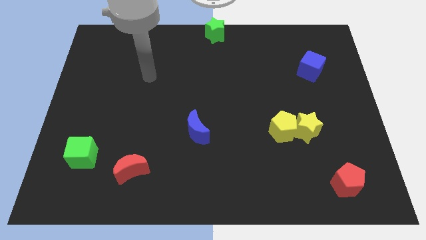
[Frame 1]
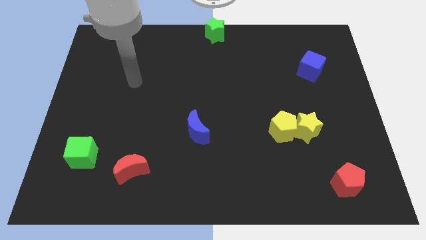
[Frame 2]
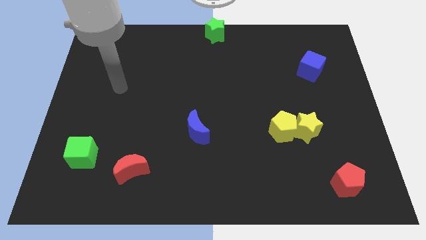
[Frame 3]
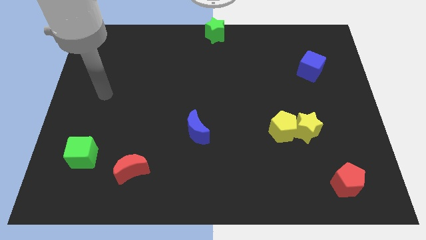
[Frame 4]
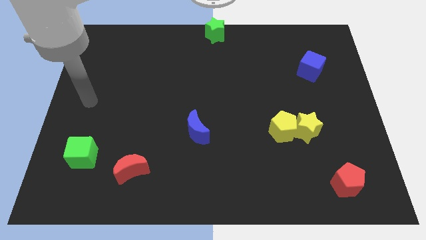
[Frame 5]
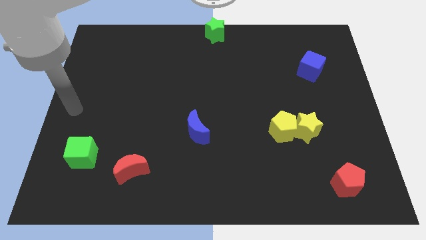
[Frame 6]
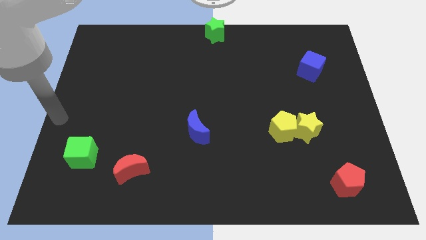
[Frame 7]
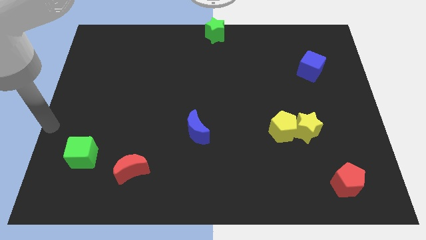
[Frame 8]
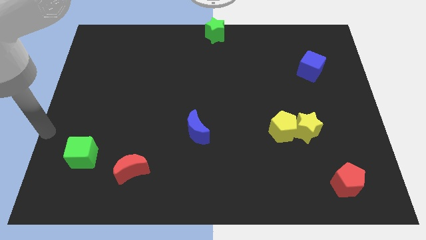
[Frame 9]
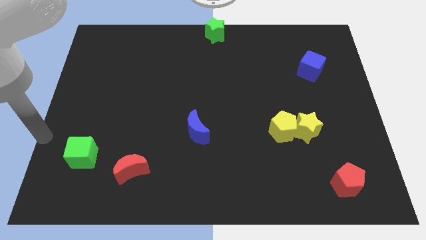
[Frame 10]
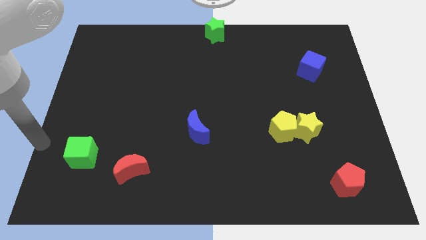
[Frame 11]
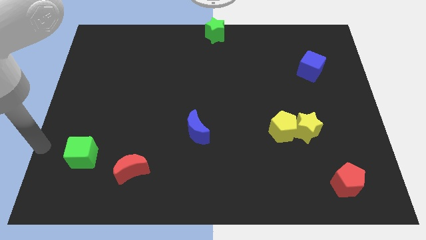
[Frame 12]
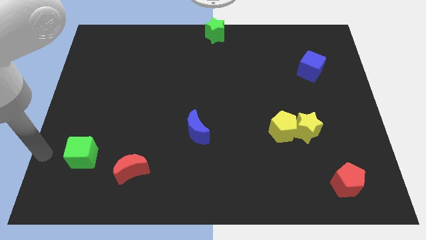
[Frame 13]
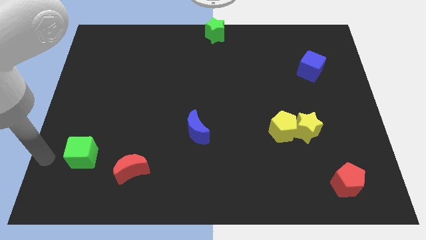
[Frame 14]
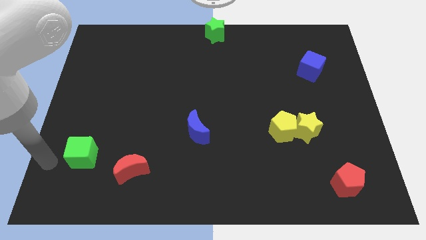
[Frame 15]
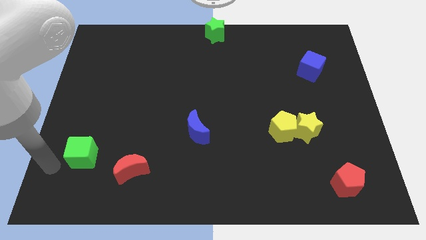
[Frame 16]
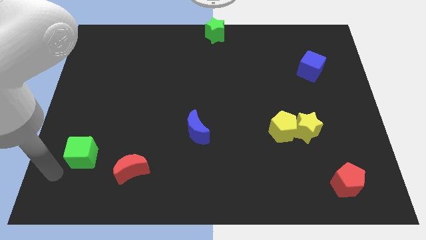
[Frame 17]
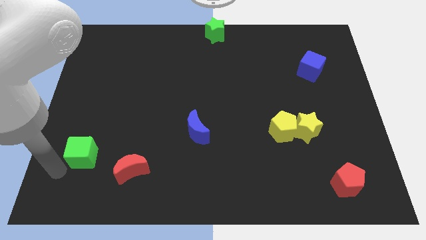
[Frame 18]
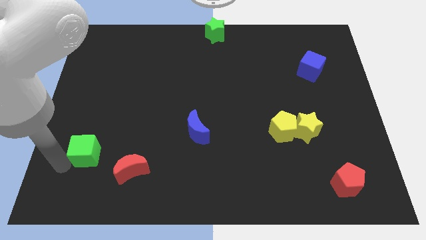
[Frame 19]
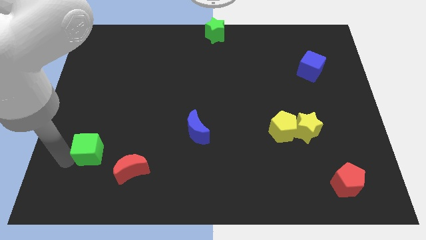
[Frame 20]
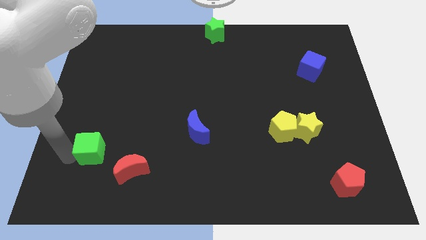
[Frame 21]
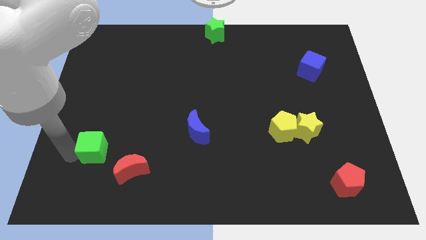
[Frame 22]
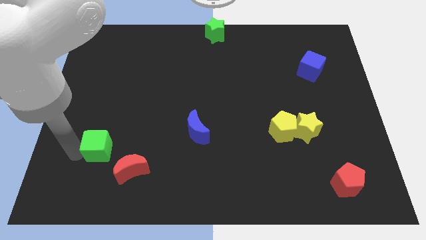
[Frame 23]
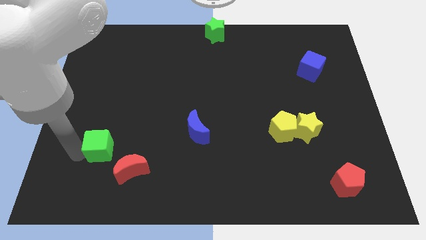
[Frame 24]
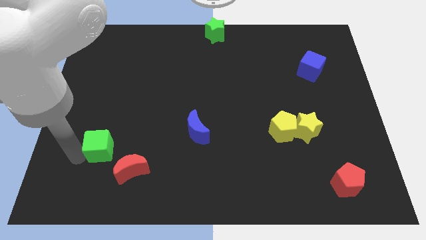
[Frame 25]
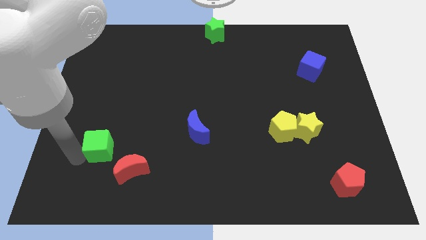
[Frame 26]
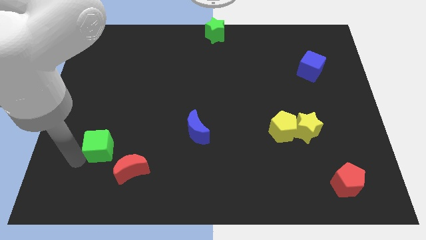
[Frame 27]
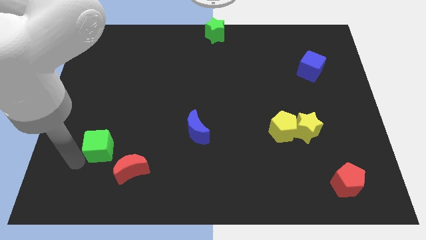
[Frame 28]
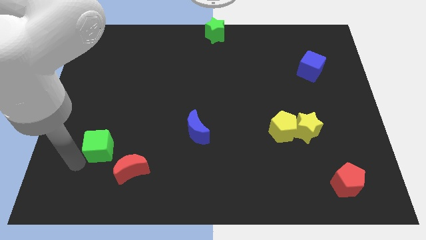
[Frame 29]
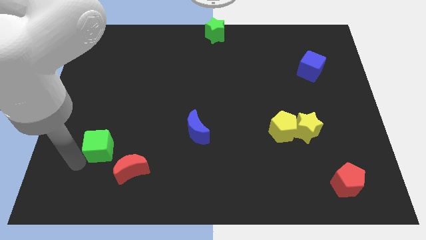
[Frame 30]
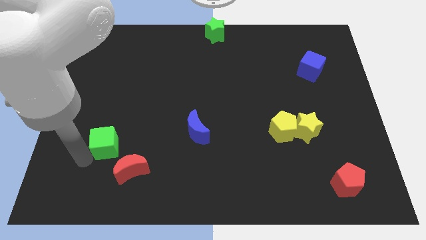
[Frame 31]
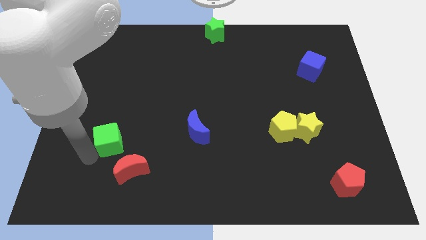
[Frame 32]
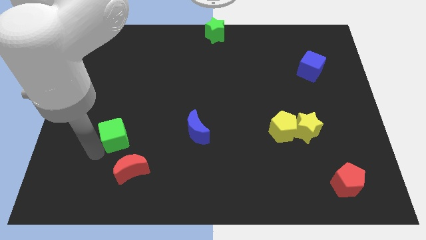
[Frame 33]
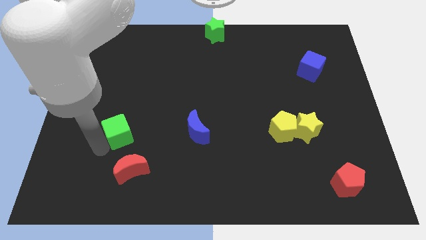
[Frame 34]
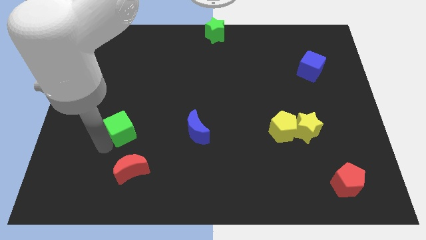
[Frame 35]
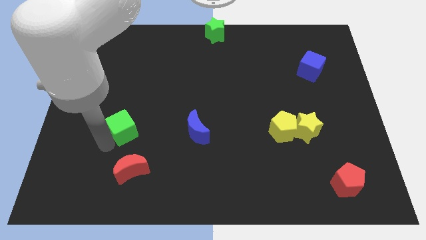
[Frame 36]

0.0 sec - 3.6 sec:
push green cube above red crescent

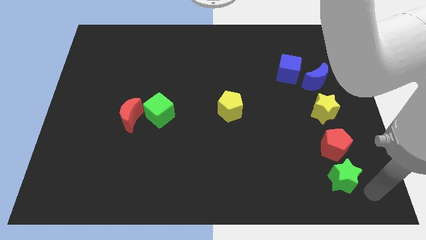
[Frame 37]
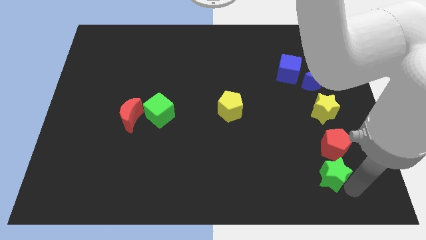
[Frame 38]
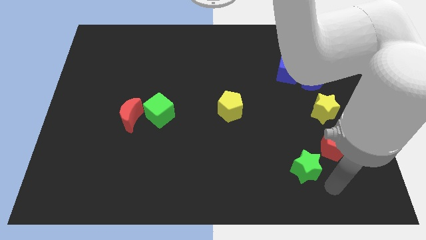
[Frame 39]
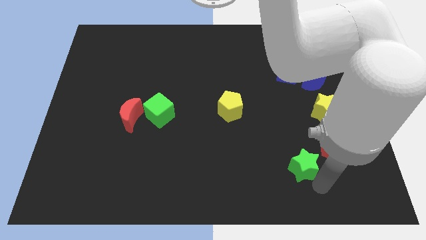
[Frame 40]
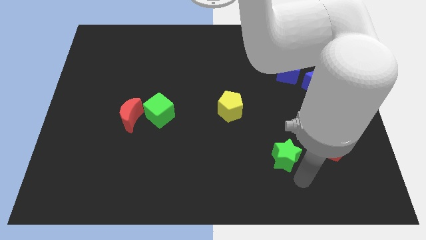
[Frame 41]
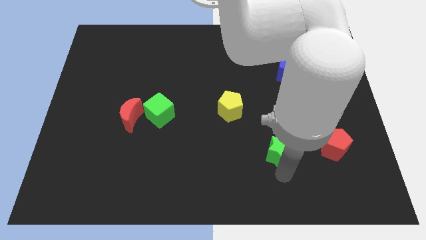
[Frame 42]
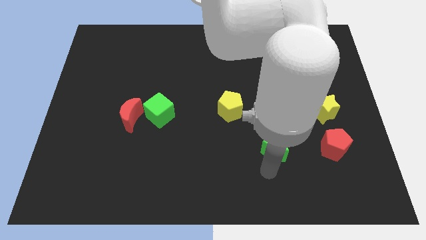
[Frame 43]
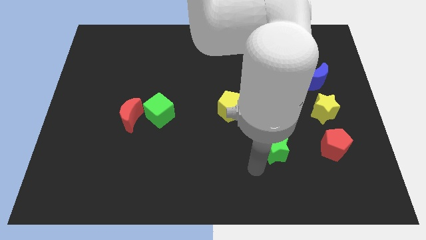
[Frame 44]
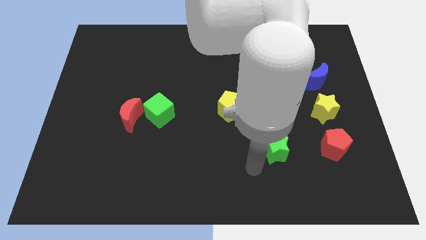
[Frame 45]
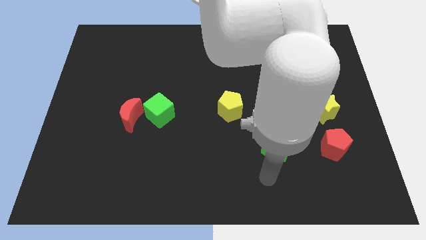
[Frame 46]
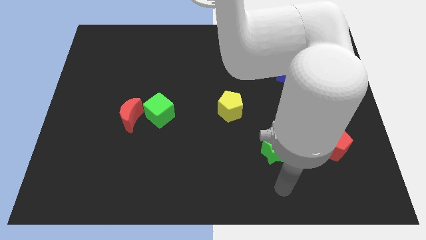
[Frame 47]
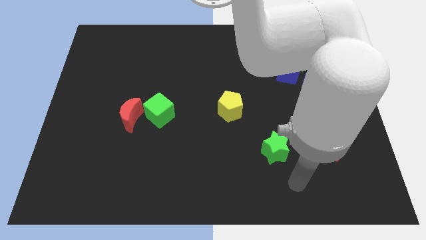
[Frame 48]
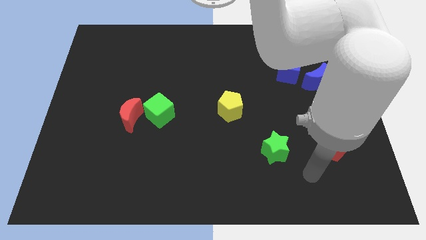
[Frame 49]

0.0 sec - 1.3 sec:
push the green star upwards to the horizontal left of the red pentagon

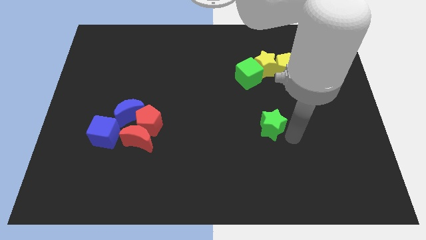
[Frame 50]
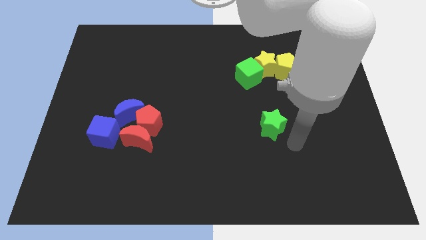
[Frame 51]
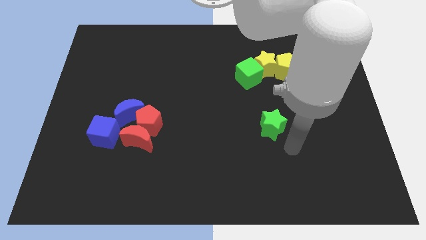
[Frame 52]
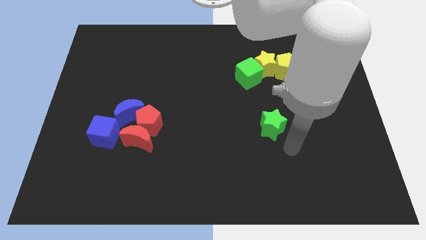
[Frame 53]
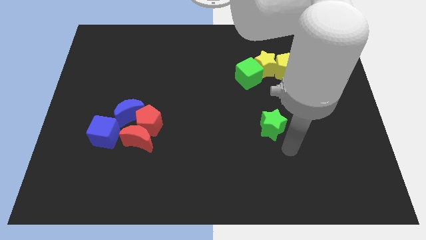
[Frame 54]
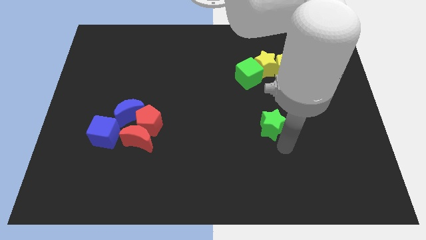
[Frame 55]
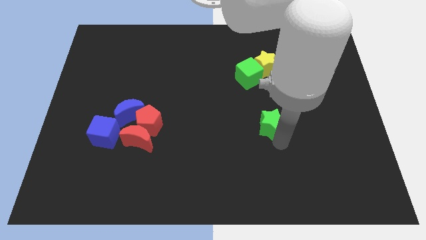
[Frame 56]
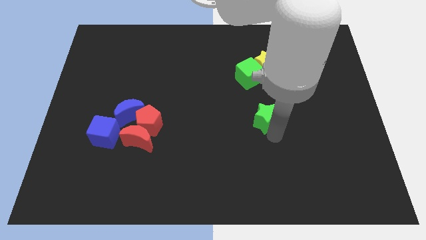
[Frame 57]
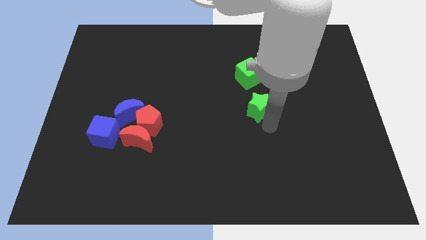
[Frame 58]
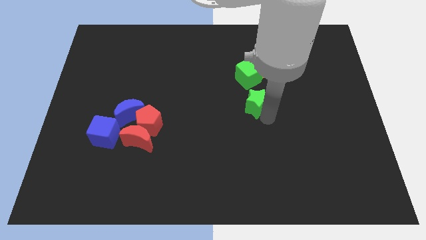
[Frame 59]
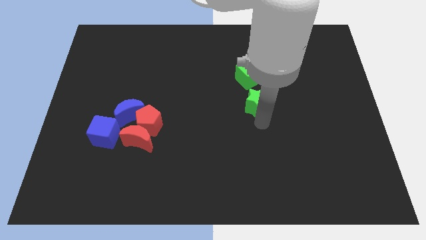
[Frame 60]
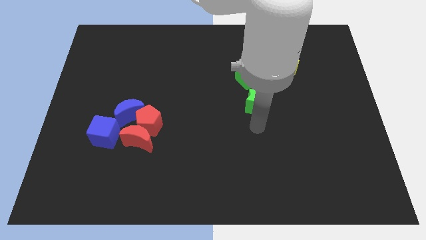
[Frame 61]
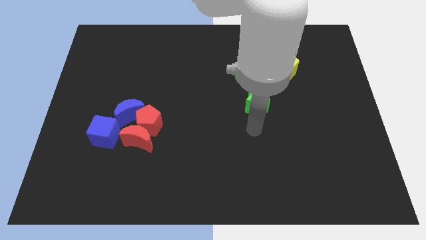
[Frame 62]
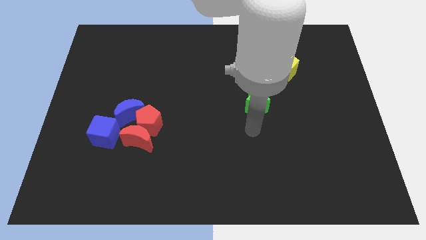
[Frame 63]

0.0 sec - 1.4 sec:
push the green star below the green cube

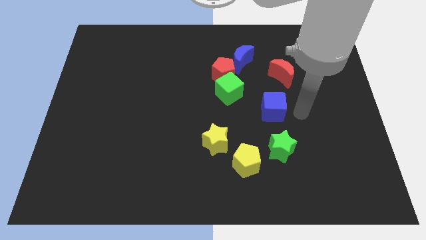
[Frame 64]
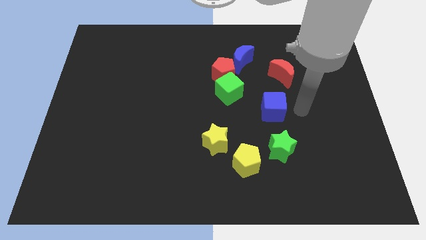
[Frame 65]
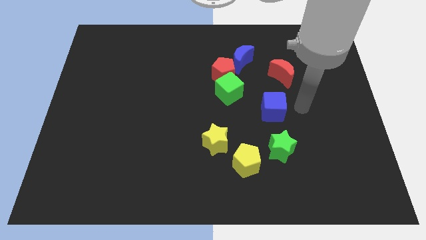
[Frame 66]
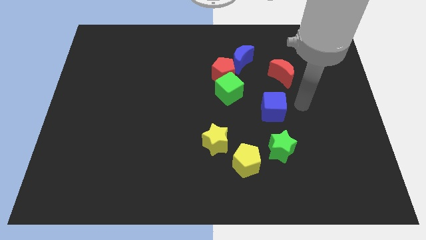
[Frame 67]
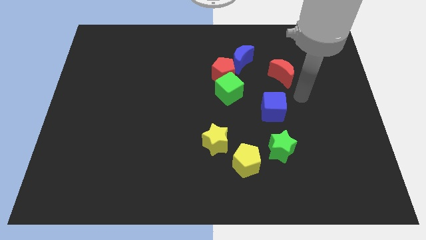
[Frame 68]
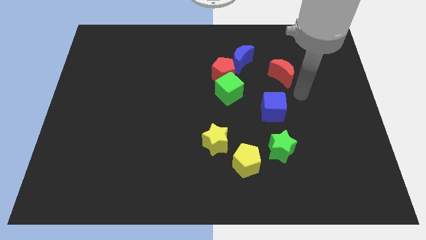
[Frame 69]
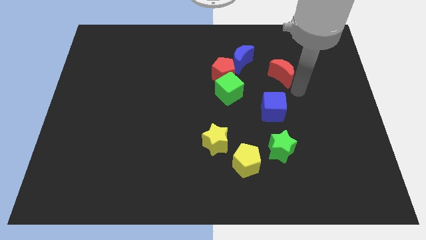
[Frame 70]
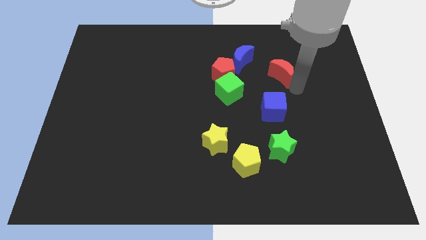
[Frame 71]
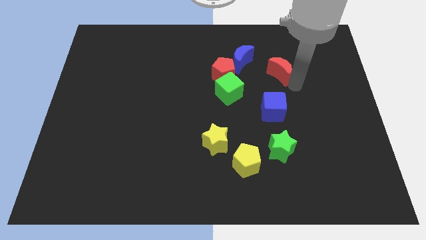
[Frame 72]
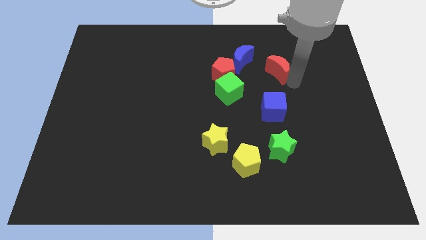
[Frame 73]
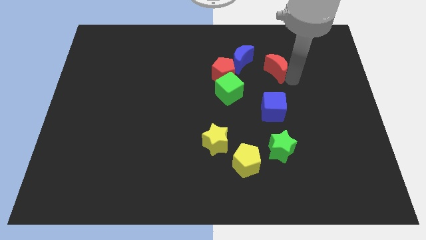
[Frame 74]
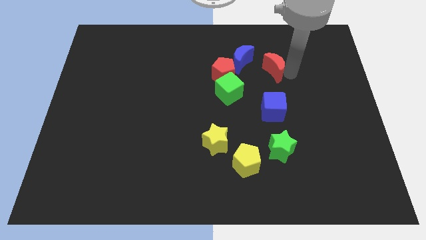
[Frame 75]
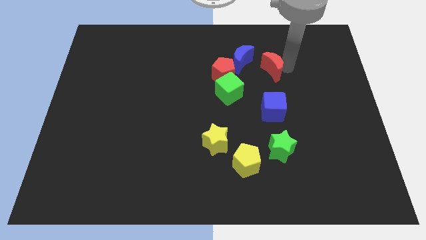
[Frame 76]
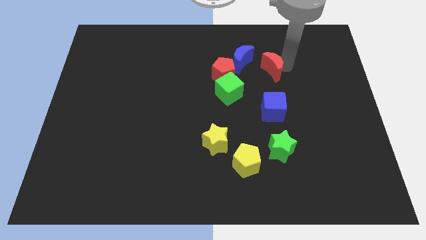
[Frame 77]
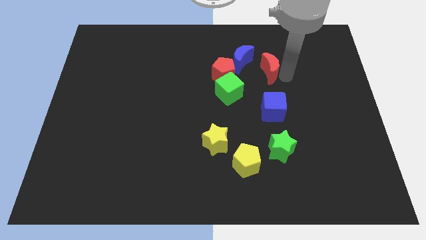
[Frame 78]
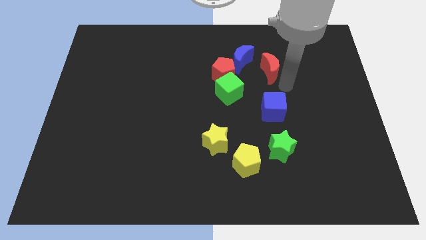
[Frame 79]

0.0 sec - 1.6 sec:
slide the red moon close to the blue moon

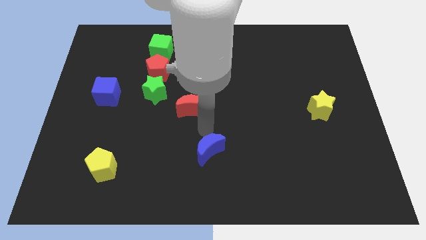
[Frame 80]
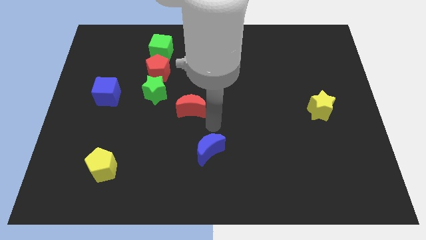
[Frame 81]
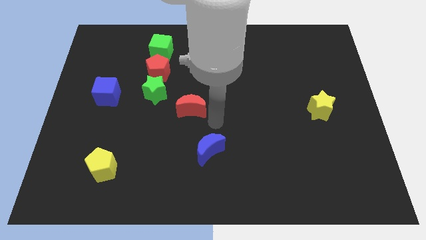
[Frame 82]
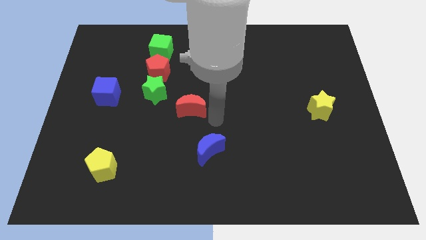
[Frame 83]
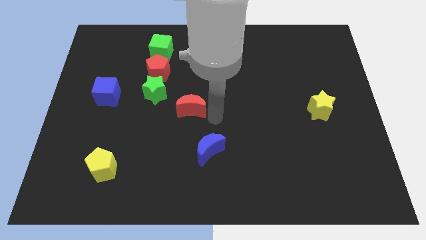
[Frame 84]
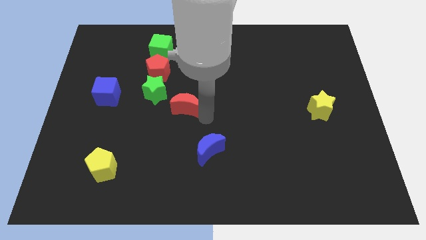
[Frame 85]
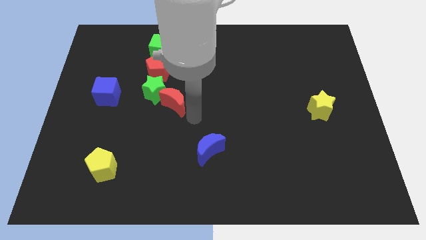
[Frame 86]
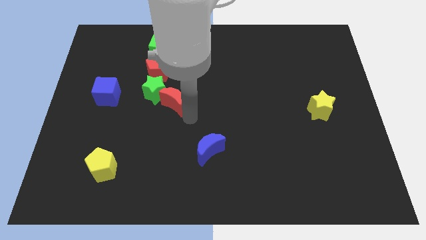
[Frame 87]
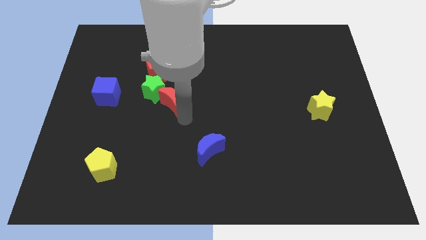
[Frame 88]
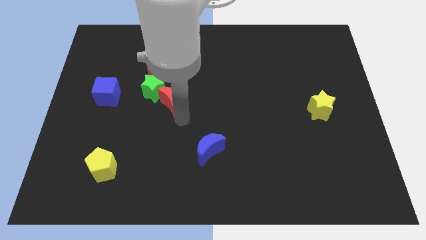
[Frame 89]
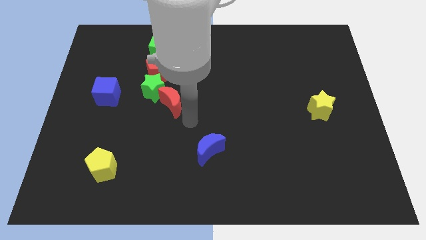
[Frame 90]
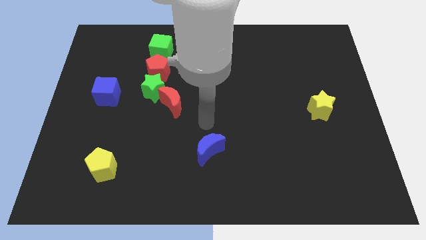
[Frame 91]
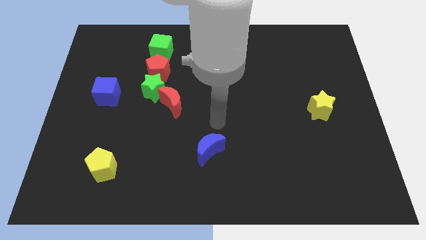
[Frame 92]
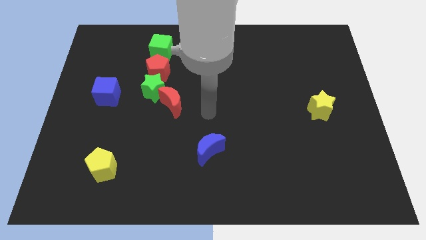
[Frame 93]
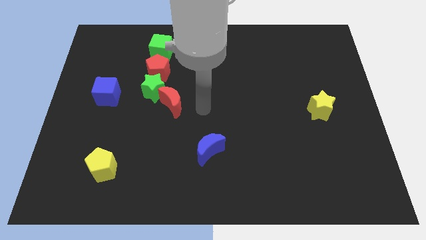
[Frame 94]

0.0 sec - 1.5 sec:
place red moon to the bottom right of green star
